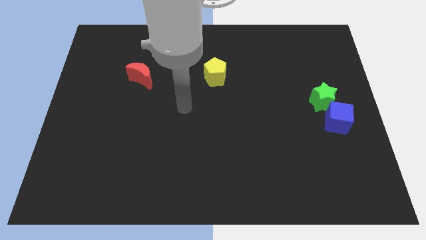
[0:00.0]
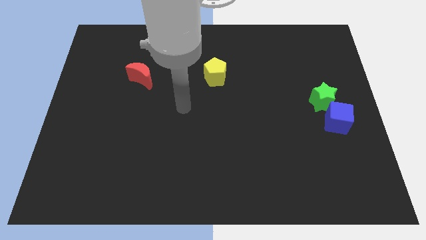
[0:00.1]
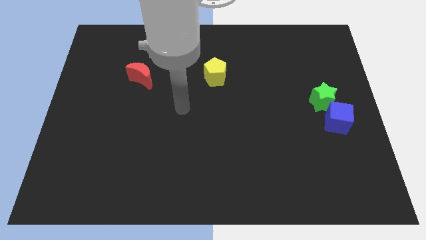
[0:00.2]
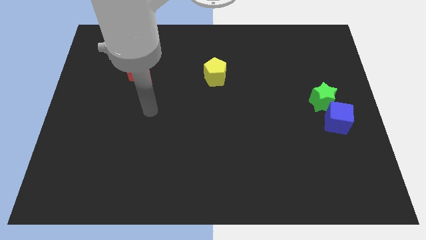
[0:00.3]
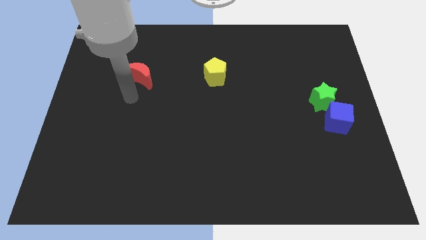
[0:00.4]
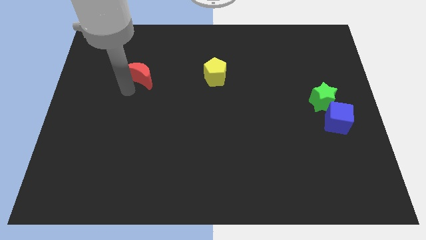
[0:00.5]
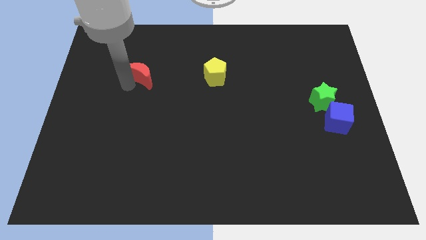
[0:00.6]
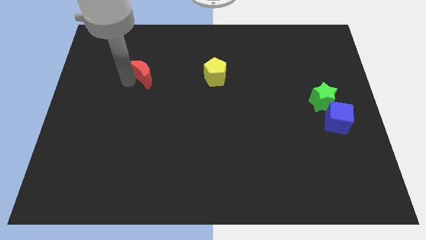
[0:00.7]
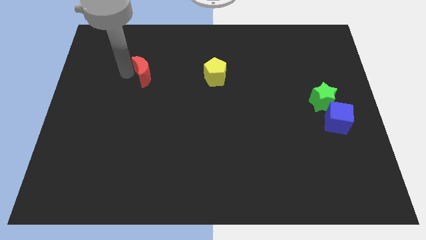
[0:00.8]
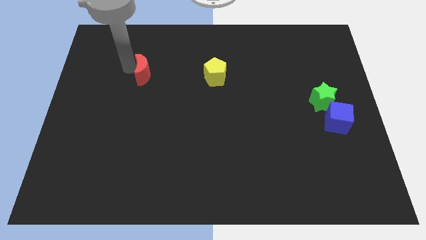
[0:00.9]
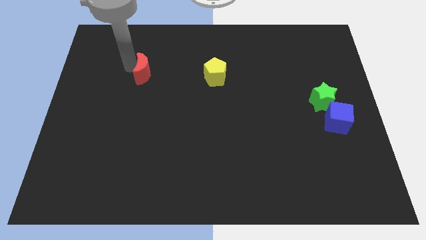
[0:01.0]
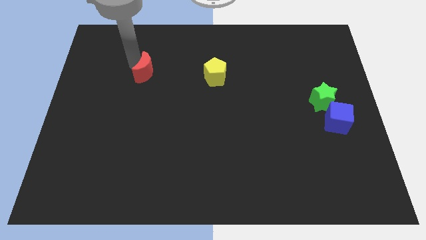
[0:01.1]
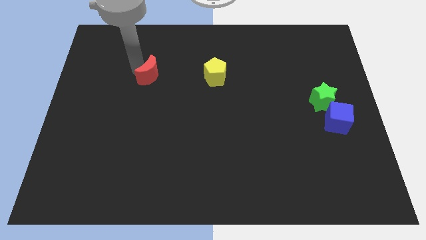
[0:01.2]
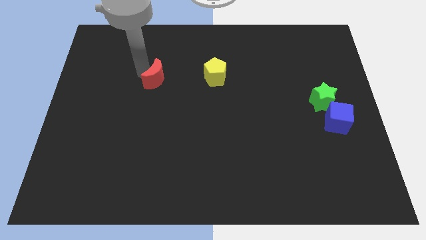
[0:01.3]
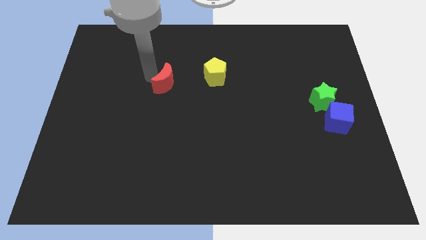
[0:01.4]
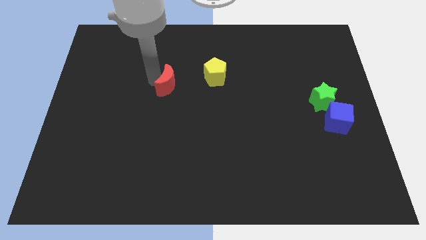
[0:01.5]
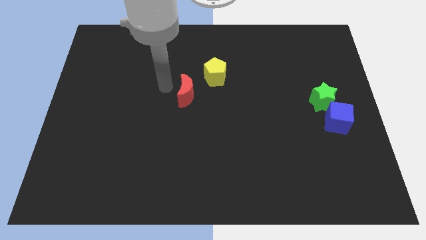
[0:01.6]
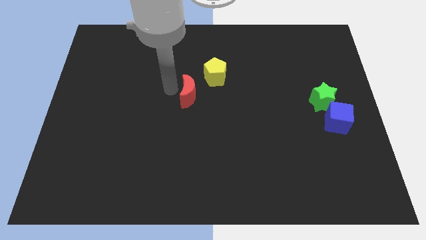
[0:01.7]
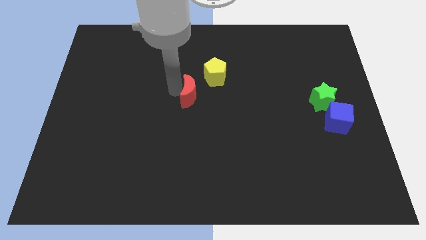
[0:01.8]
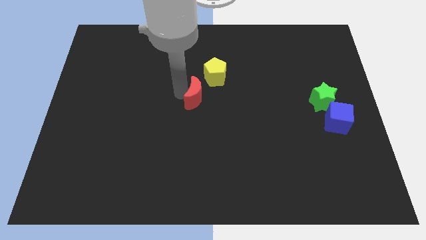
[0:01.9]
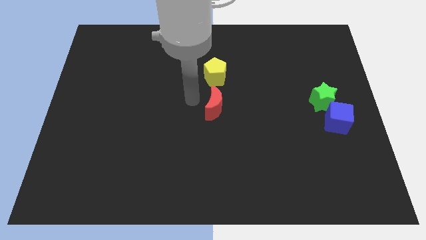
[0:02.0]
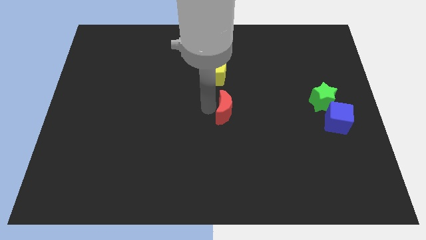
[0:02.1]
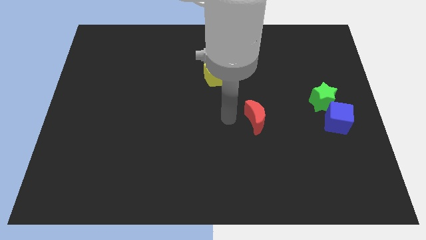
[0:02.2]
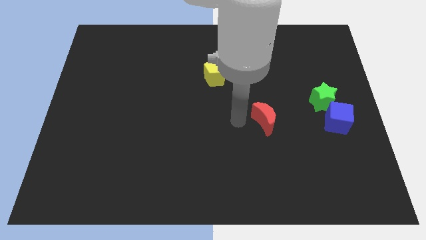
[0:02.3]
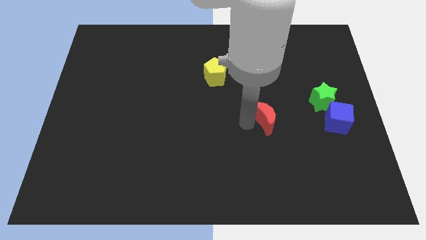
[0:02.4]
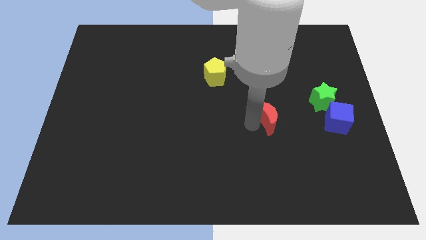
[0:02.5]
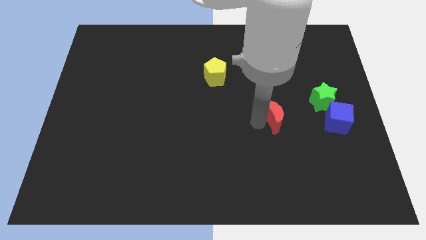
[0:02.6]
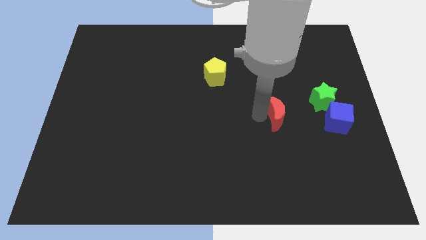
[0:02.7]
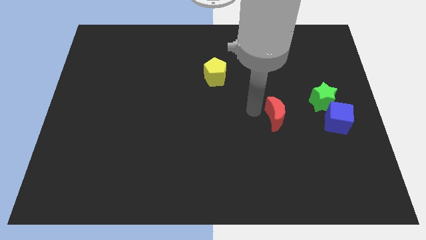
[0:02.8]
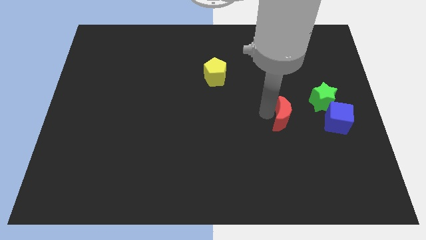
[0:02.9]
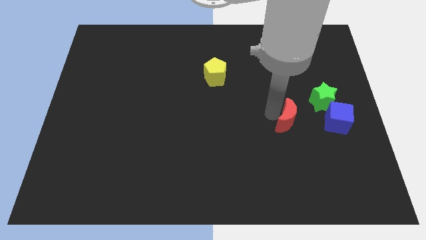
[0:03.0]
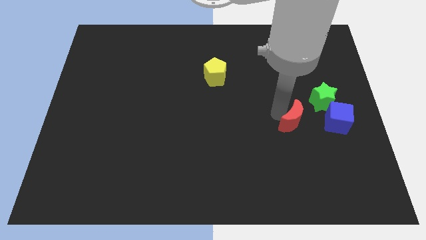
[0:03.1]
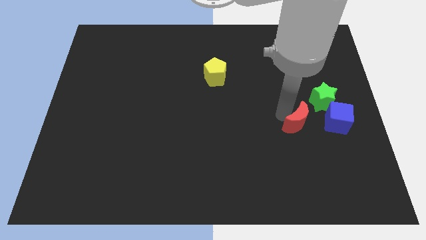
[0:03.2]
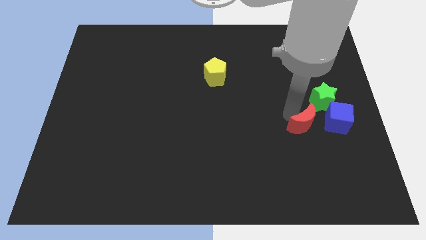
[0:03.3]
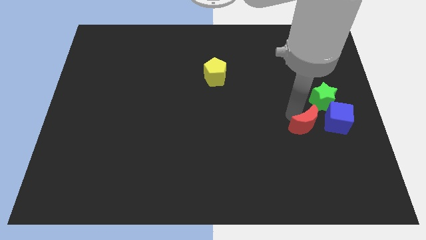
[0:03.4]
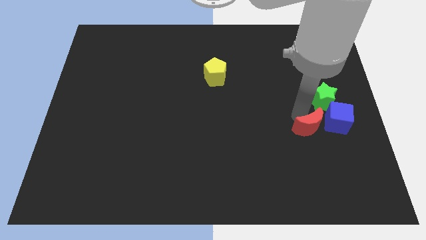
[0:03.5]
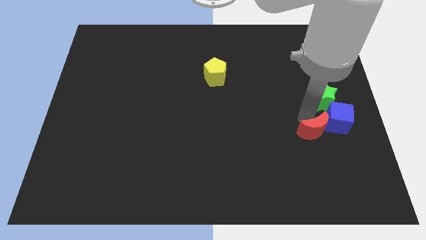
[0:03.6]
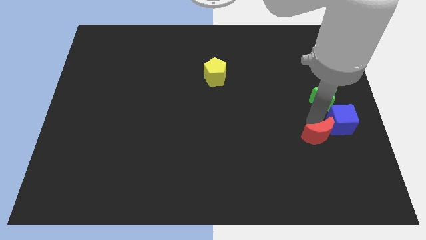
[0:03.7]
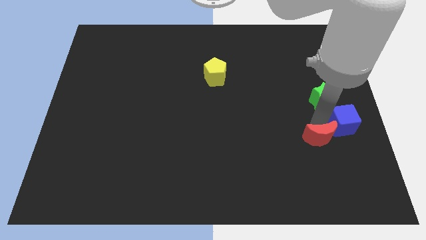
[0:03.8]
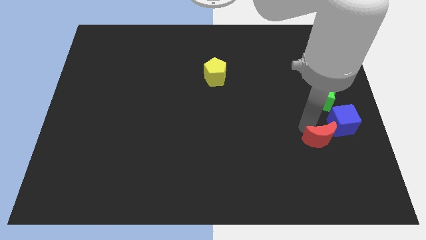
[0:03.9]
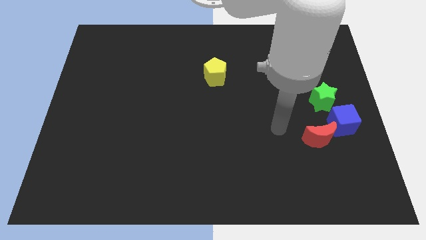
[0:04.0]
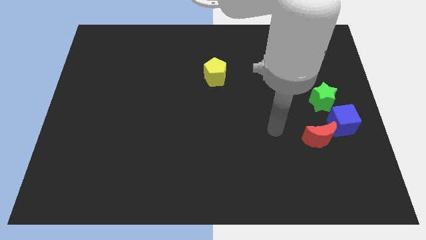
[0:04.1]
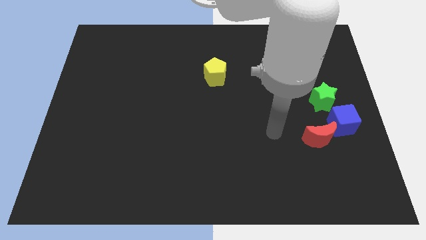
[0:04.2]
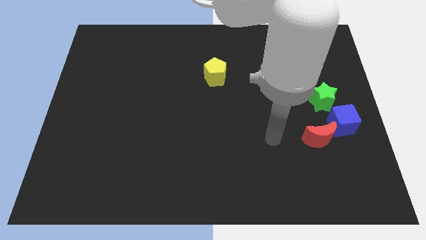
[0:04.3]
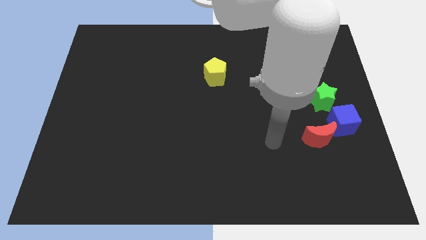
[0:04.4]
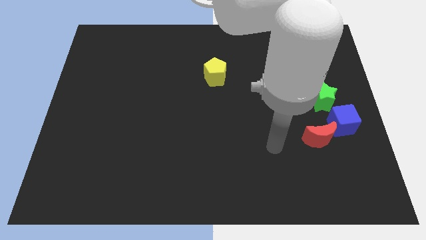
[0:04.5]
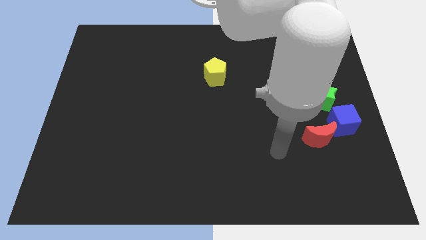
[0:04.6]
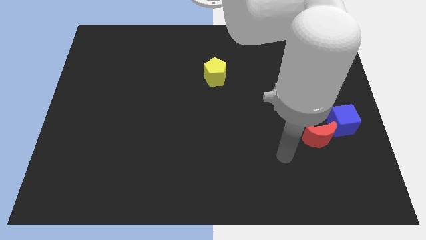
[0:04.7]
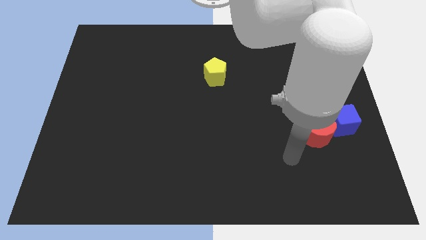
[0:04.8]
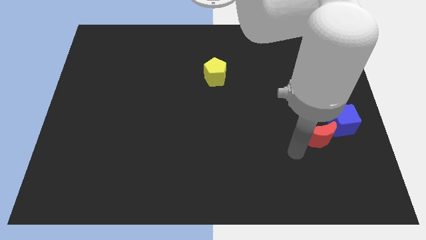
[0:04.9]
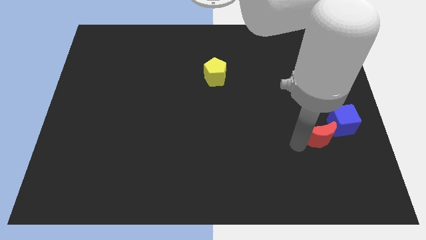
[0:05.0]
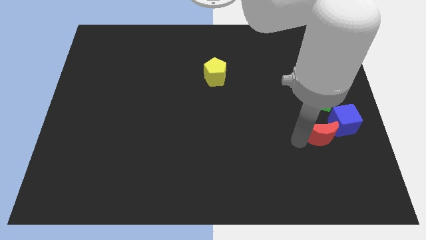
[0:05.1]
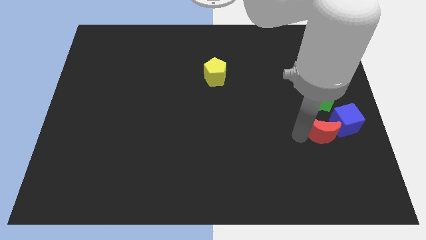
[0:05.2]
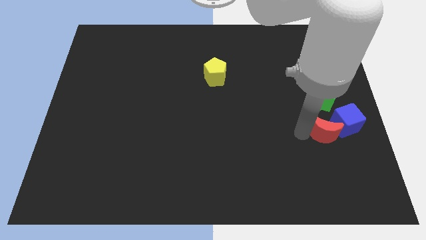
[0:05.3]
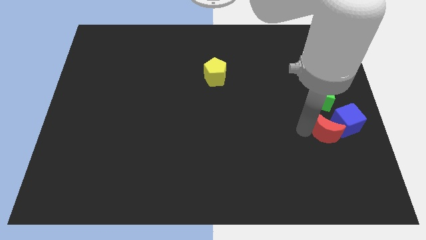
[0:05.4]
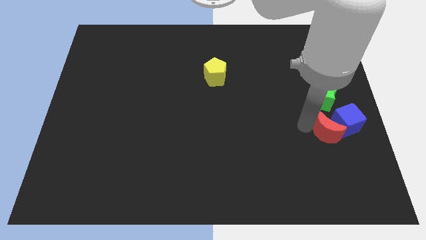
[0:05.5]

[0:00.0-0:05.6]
put the red moon towards the blue cube

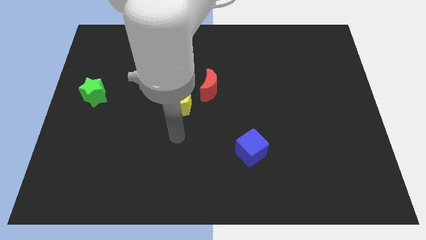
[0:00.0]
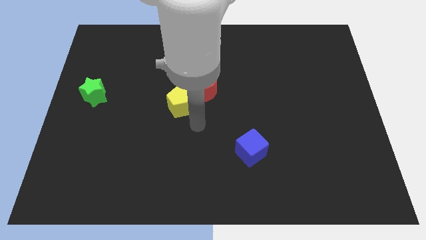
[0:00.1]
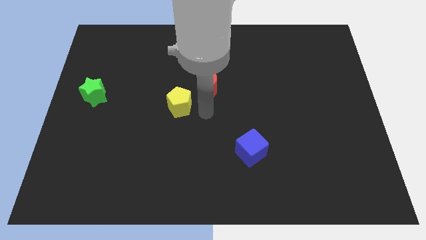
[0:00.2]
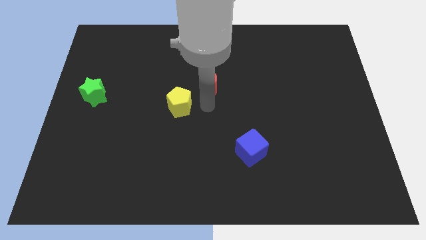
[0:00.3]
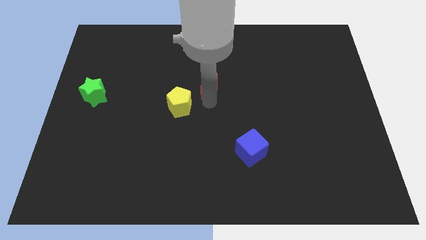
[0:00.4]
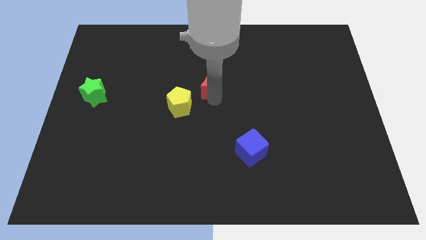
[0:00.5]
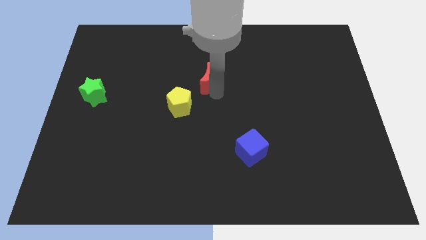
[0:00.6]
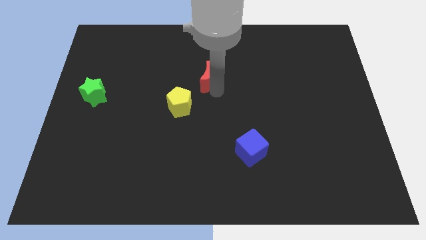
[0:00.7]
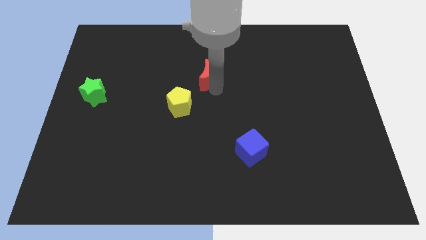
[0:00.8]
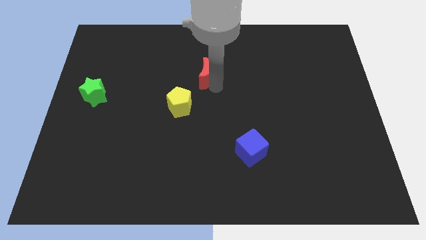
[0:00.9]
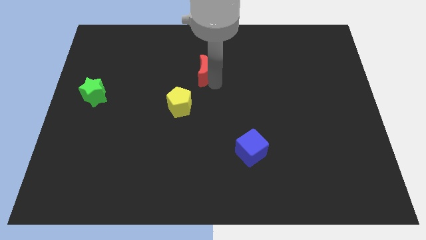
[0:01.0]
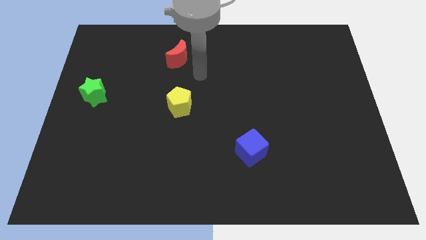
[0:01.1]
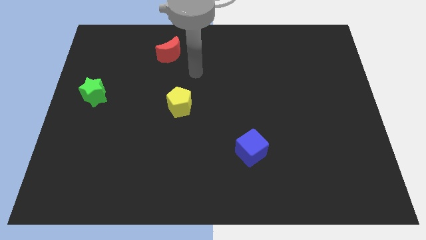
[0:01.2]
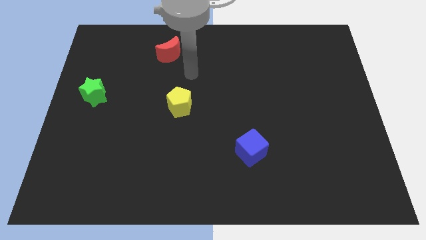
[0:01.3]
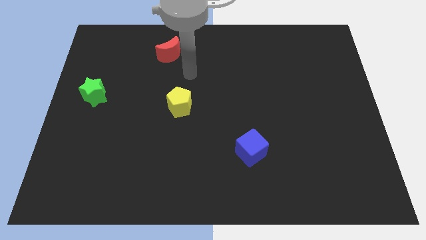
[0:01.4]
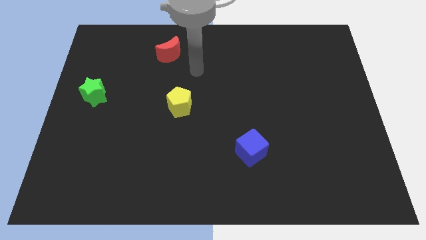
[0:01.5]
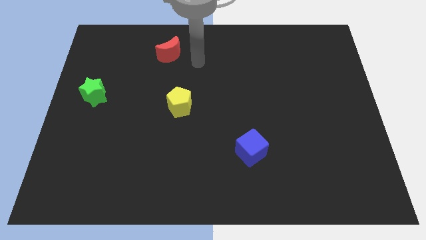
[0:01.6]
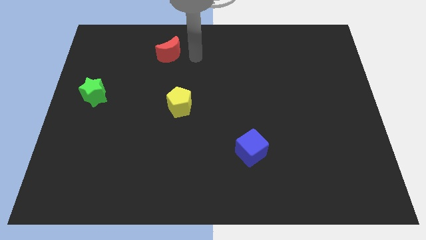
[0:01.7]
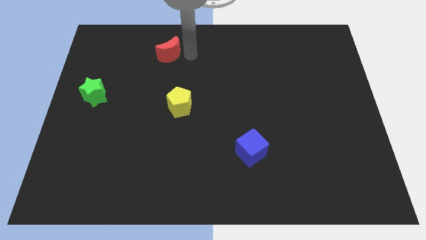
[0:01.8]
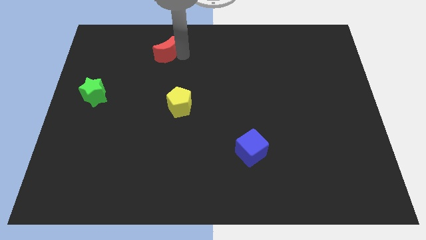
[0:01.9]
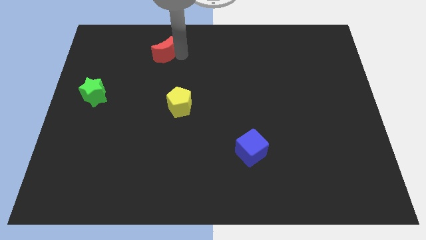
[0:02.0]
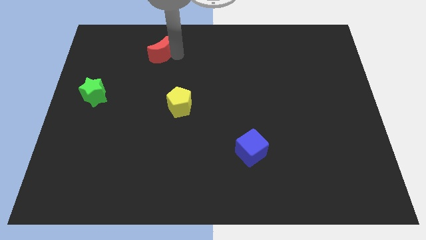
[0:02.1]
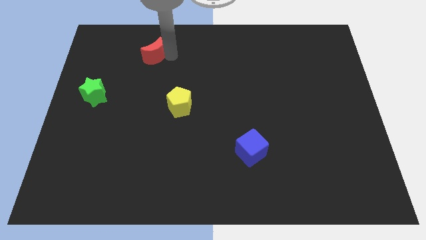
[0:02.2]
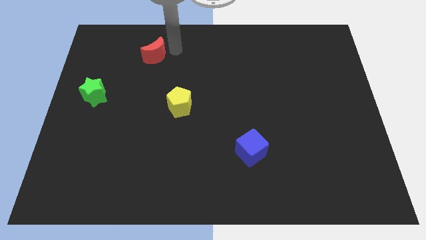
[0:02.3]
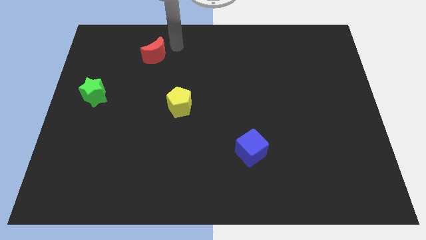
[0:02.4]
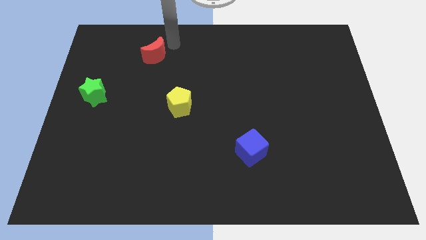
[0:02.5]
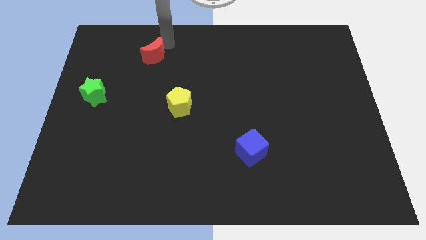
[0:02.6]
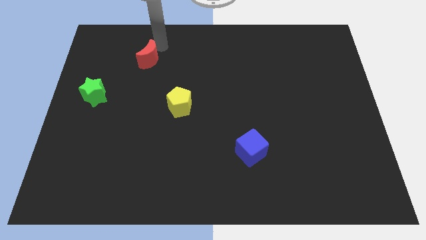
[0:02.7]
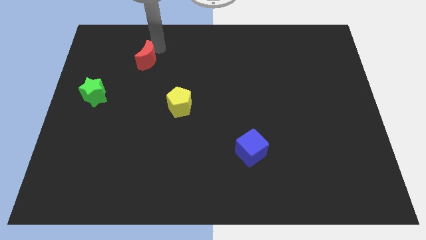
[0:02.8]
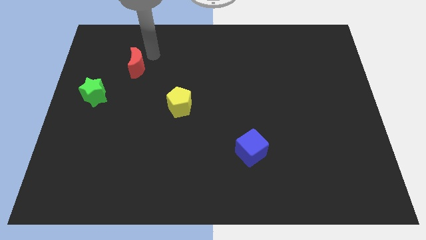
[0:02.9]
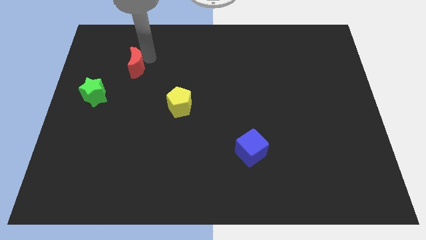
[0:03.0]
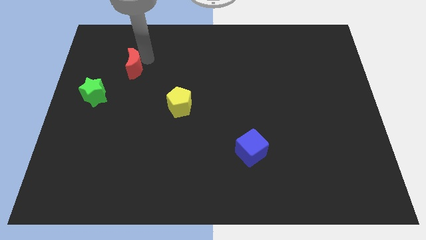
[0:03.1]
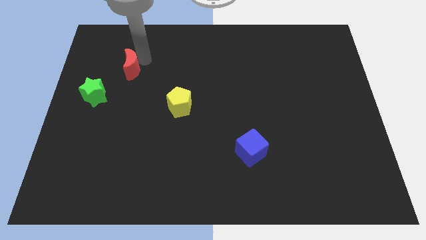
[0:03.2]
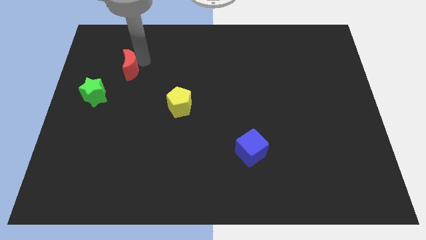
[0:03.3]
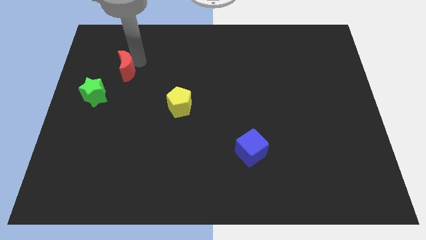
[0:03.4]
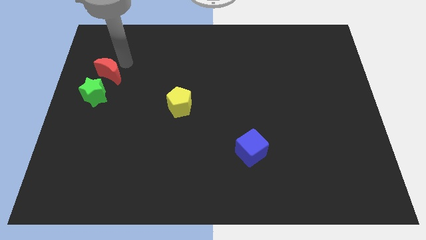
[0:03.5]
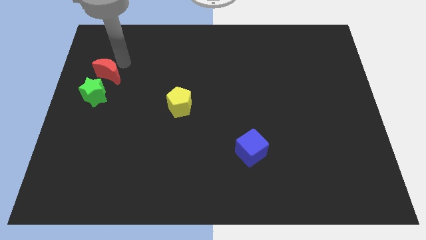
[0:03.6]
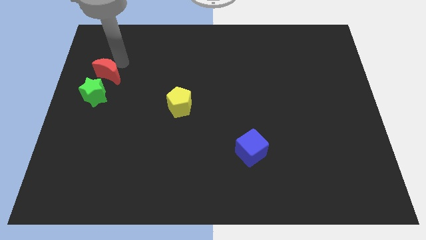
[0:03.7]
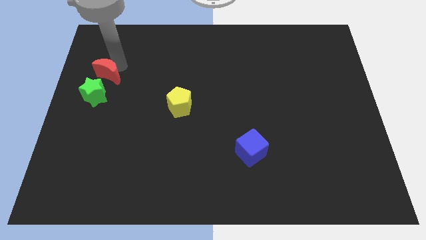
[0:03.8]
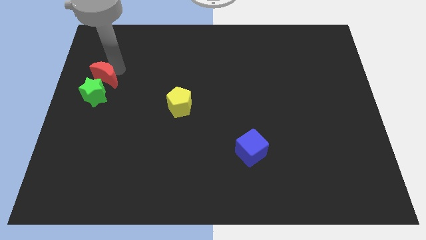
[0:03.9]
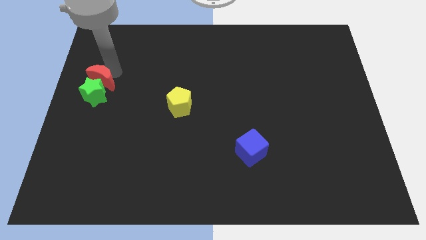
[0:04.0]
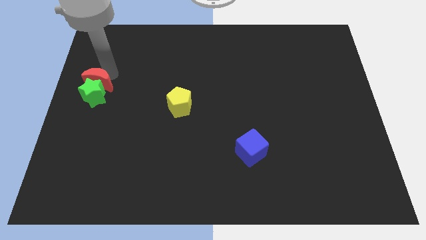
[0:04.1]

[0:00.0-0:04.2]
put the red block towards the green star
